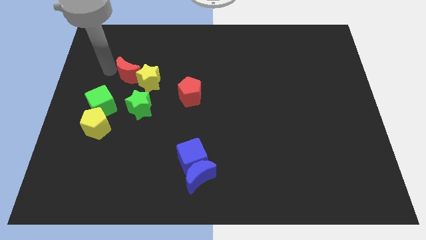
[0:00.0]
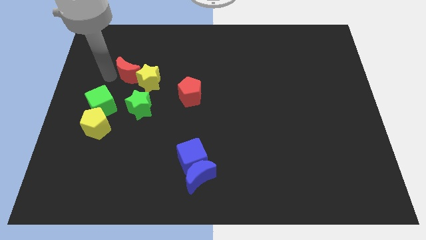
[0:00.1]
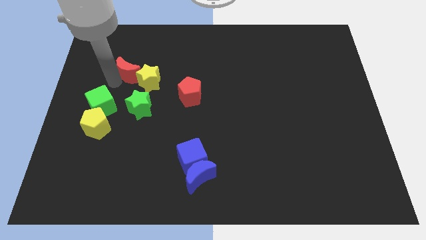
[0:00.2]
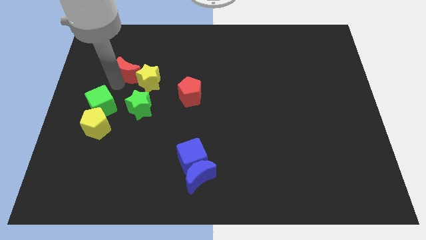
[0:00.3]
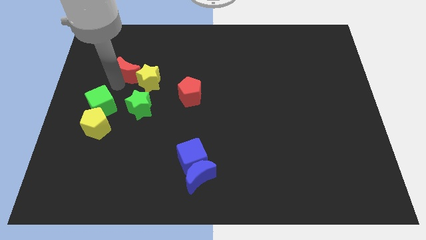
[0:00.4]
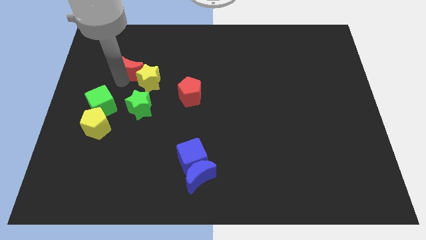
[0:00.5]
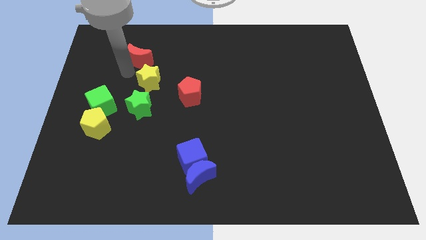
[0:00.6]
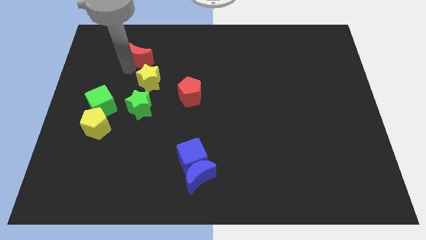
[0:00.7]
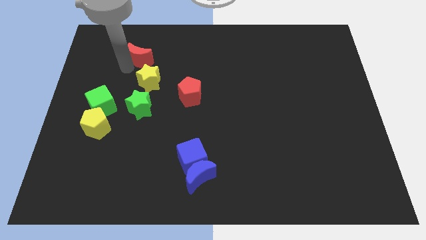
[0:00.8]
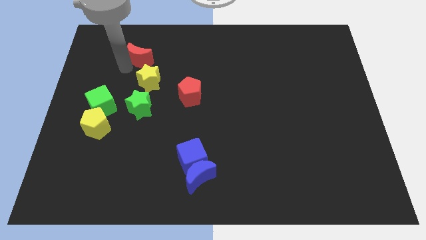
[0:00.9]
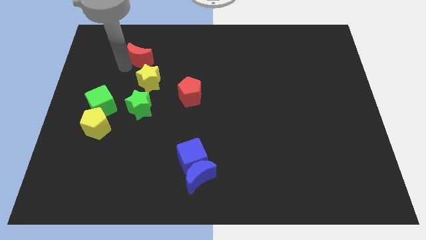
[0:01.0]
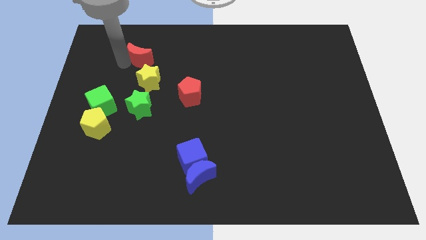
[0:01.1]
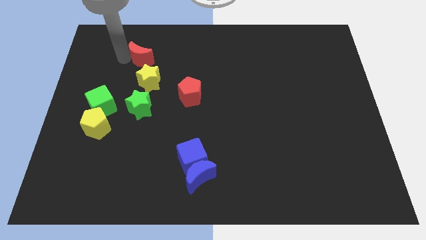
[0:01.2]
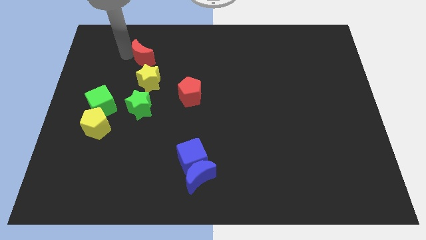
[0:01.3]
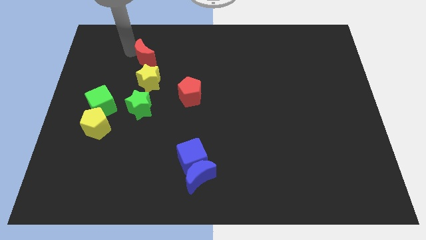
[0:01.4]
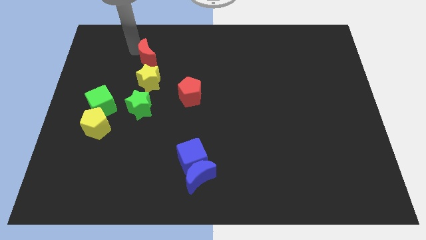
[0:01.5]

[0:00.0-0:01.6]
push the red moon to the top of the yellow star

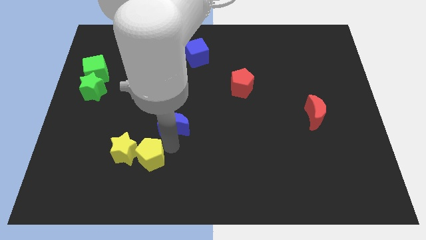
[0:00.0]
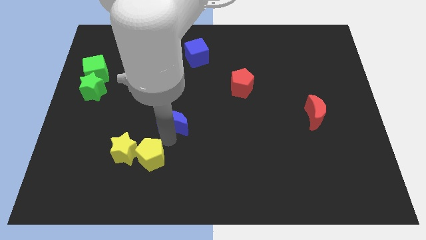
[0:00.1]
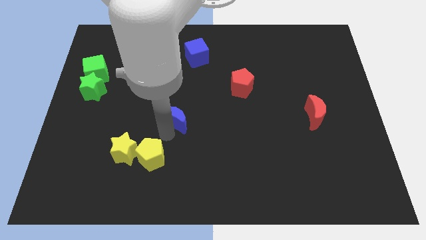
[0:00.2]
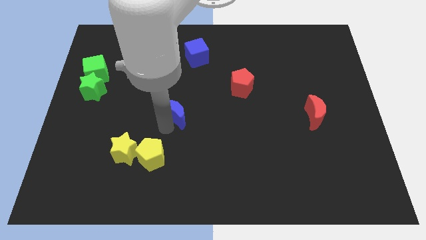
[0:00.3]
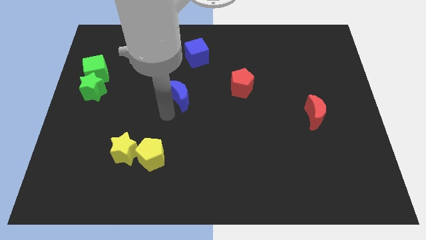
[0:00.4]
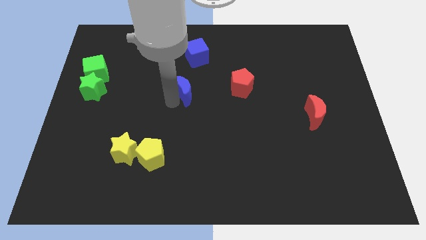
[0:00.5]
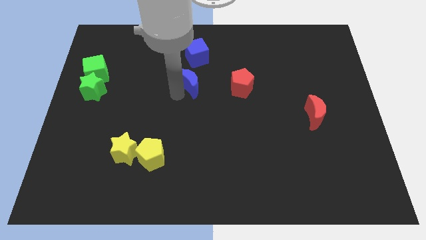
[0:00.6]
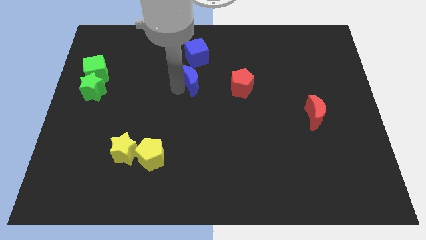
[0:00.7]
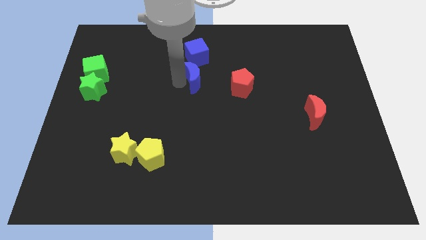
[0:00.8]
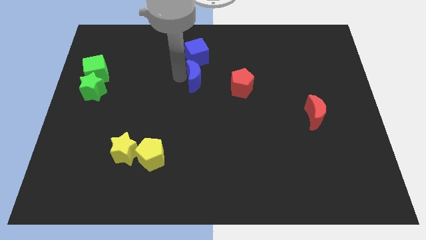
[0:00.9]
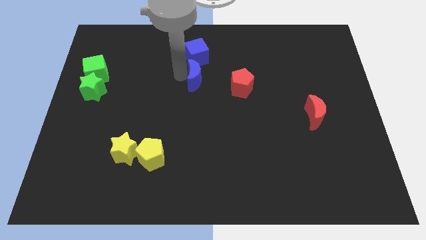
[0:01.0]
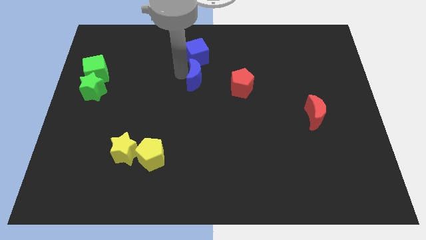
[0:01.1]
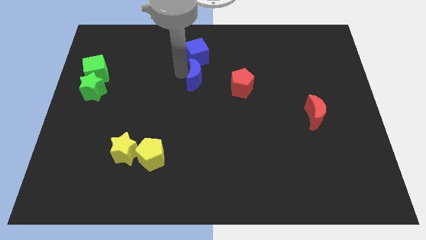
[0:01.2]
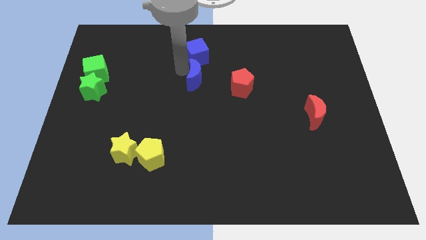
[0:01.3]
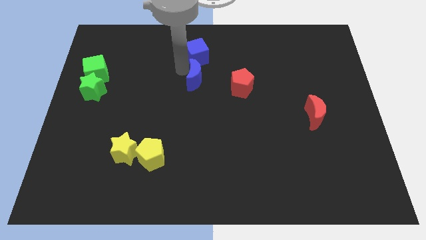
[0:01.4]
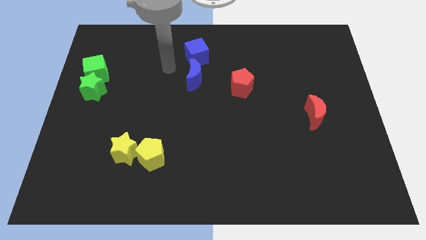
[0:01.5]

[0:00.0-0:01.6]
place the blue crescent below the blue cube

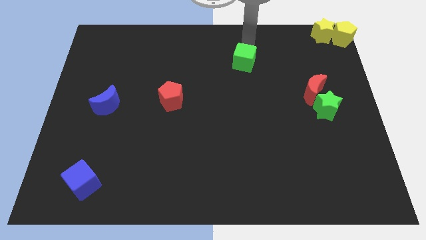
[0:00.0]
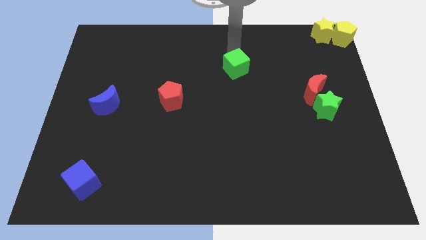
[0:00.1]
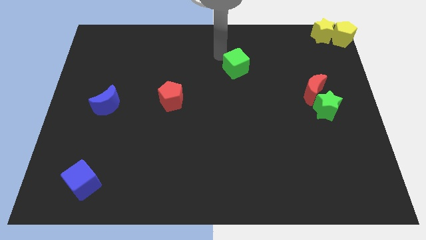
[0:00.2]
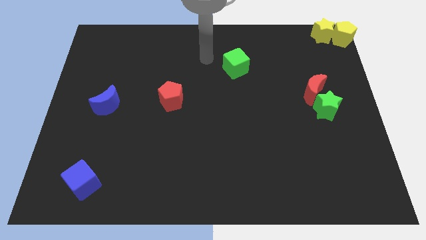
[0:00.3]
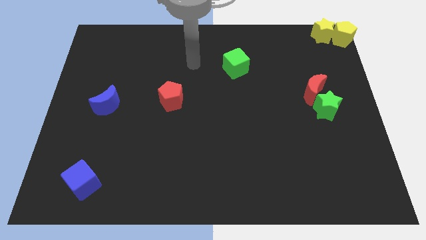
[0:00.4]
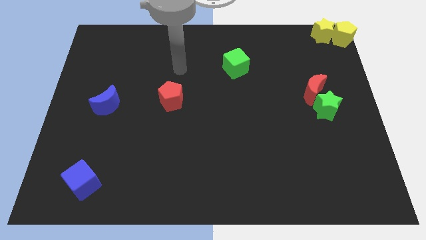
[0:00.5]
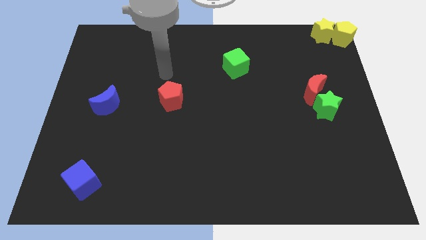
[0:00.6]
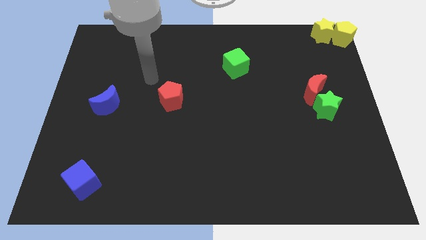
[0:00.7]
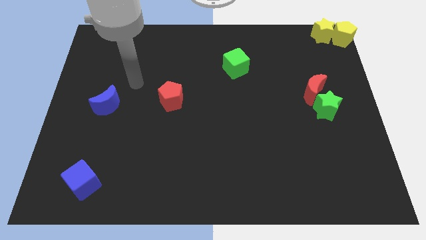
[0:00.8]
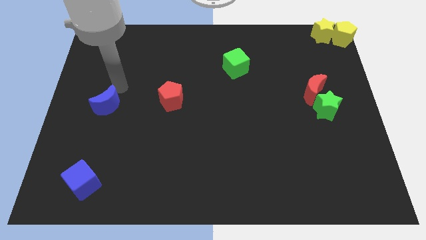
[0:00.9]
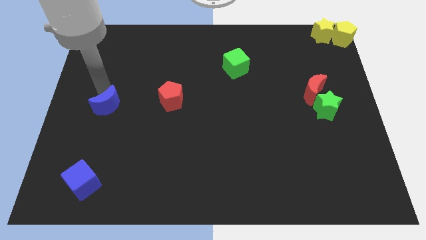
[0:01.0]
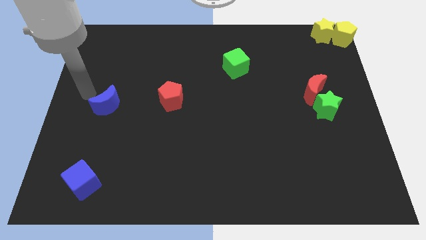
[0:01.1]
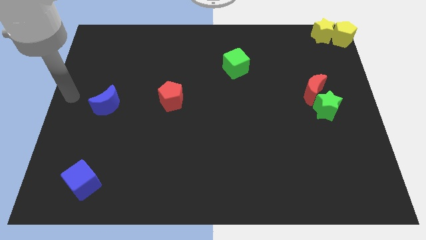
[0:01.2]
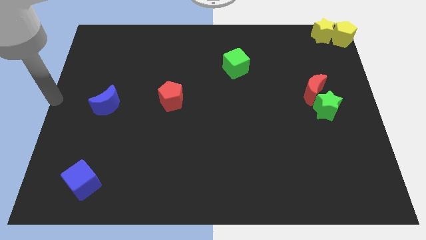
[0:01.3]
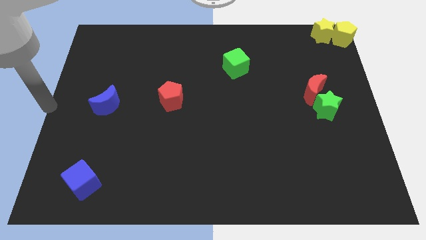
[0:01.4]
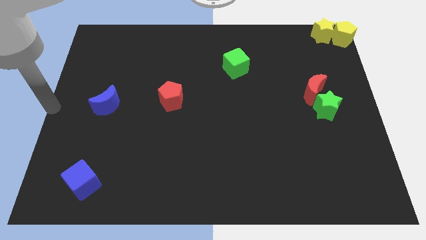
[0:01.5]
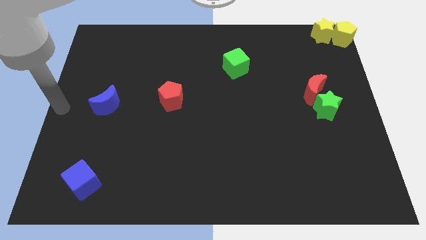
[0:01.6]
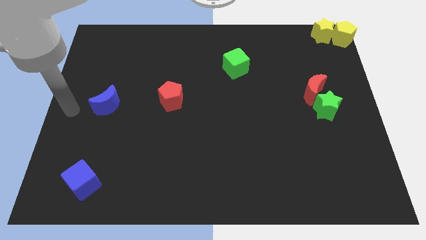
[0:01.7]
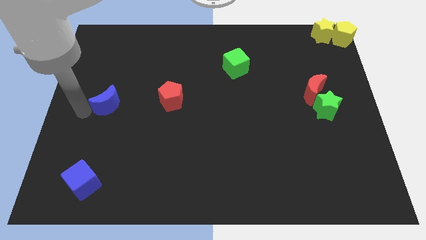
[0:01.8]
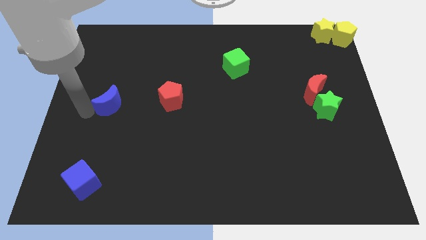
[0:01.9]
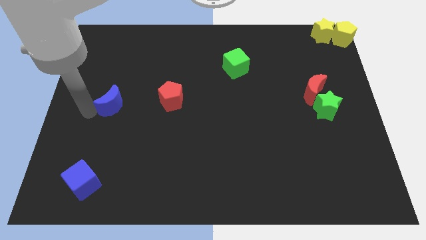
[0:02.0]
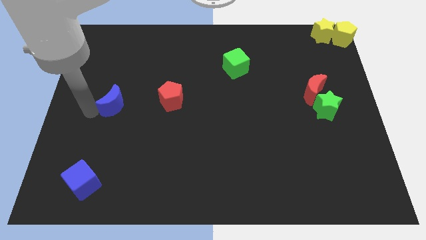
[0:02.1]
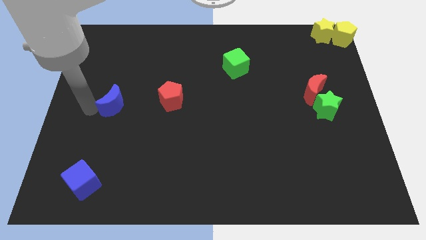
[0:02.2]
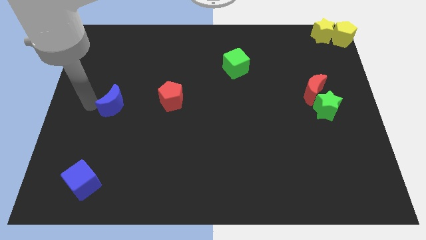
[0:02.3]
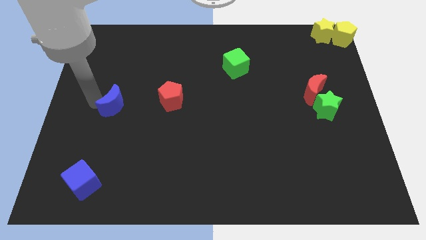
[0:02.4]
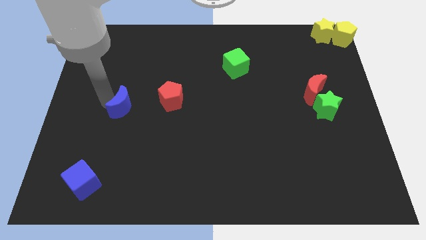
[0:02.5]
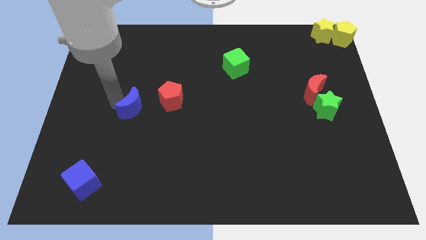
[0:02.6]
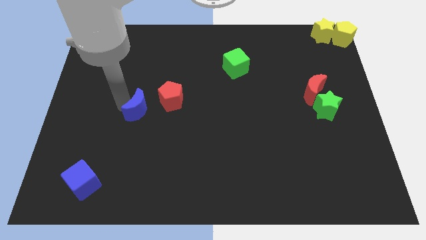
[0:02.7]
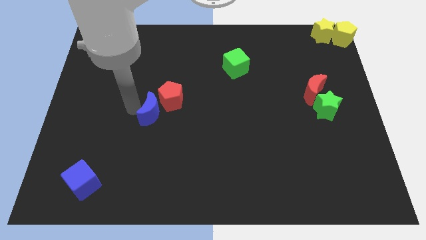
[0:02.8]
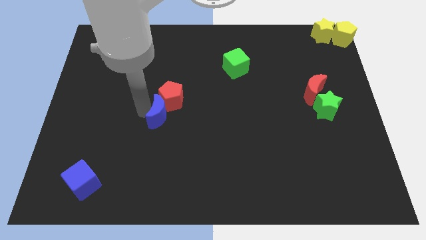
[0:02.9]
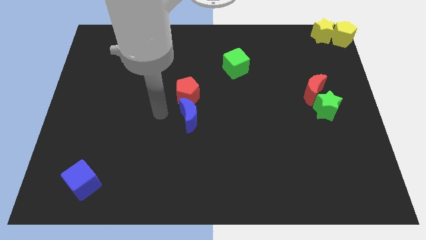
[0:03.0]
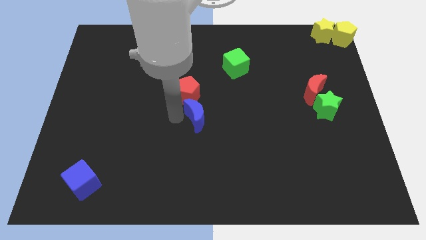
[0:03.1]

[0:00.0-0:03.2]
move the blue moon close to the red pentagon

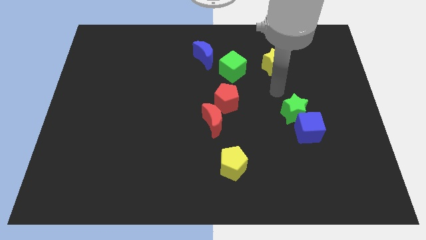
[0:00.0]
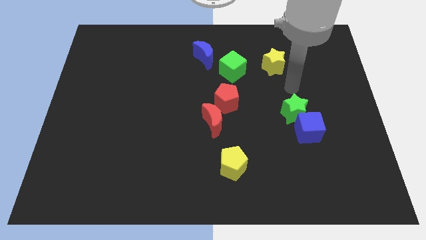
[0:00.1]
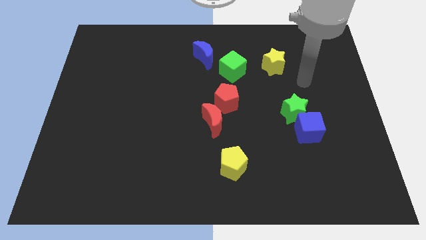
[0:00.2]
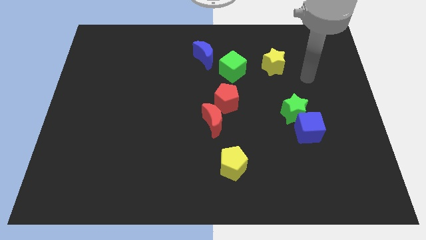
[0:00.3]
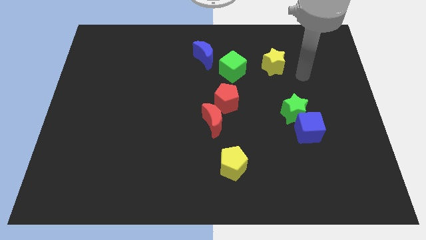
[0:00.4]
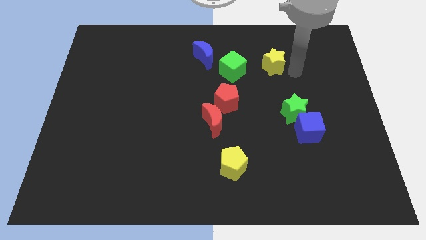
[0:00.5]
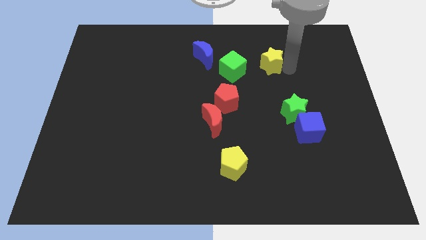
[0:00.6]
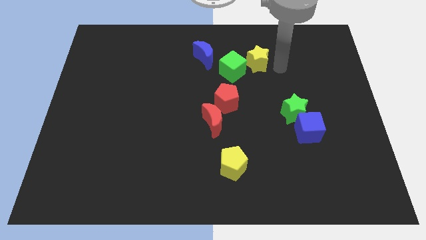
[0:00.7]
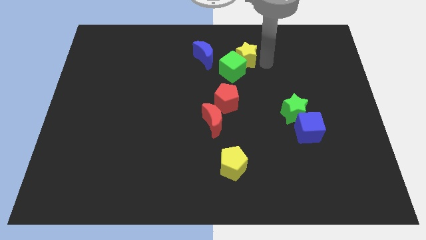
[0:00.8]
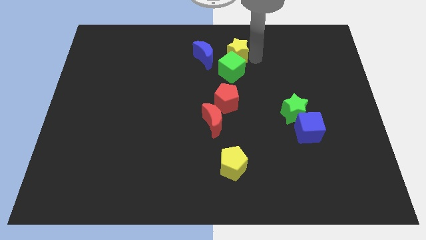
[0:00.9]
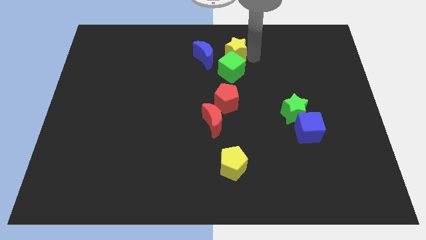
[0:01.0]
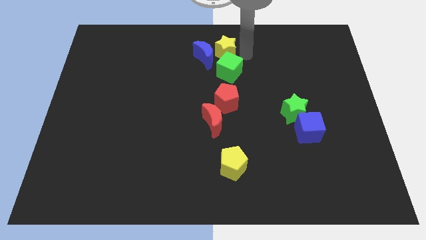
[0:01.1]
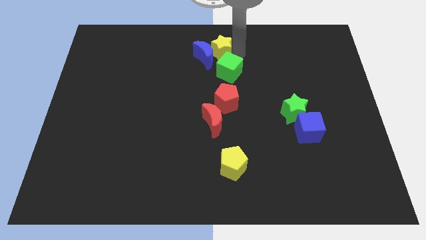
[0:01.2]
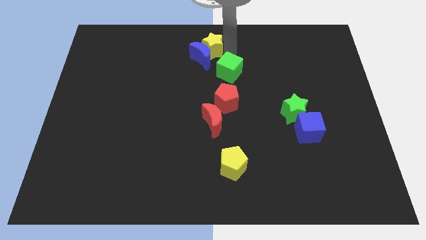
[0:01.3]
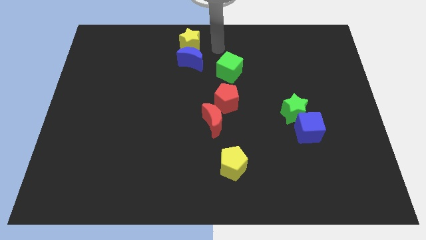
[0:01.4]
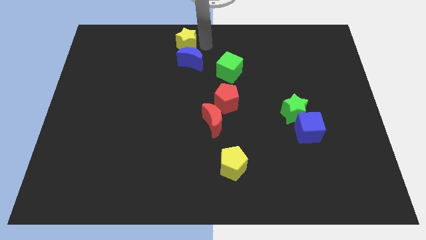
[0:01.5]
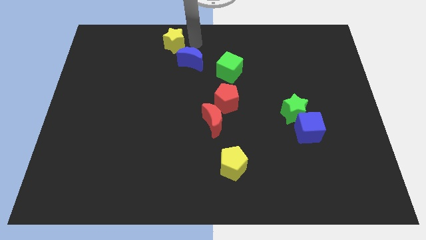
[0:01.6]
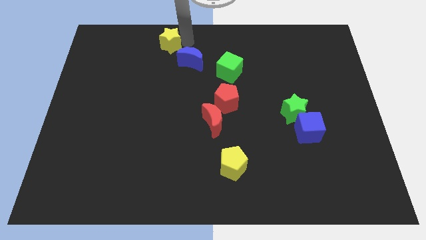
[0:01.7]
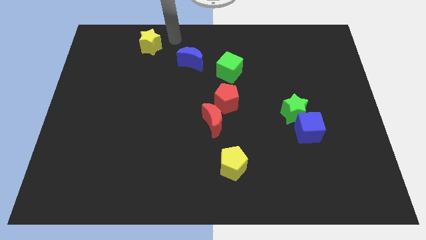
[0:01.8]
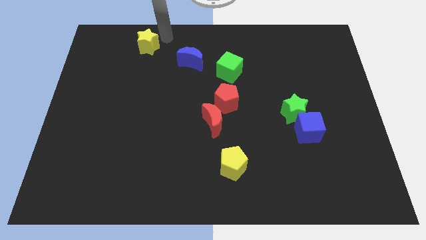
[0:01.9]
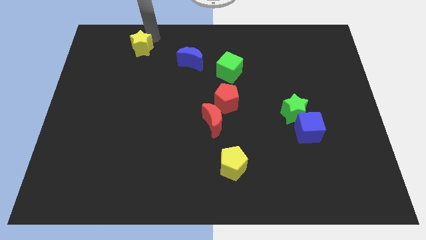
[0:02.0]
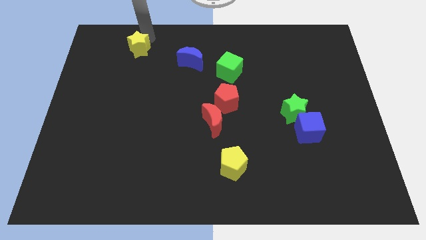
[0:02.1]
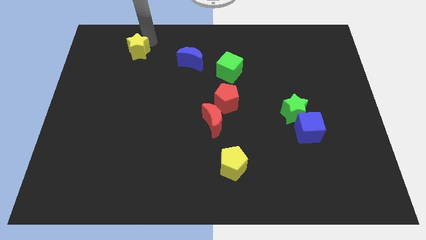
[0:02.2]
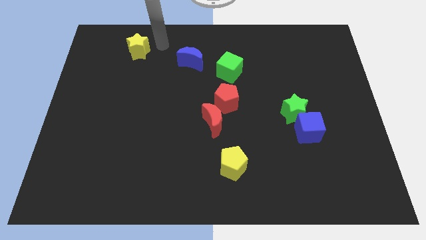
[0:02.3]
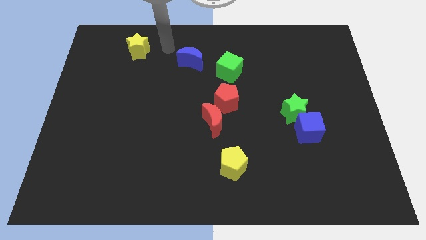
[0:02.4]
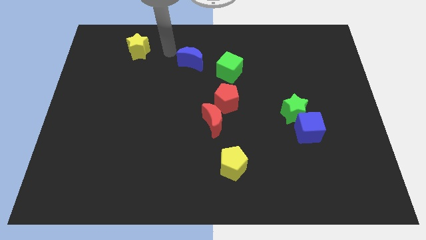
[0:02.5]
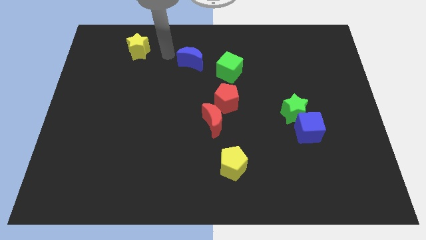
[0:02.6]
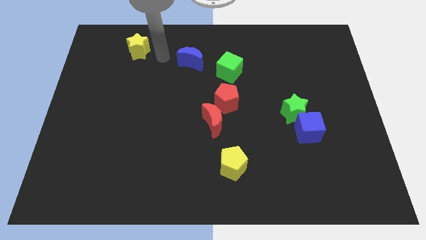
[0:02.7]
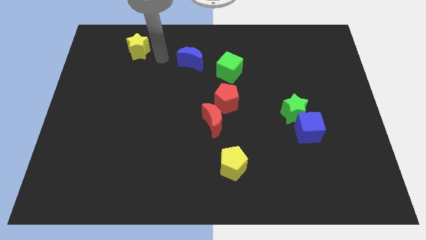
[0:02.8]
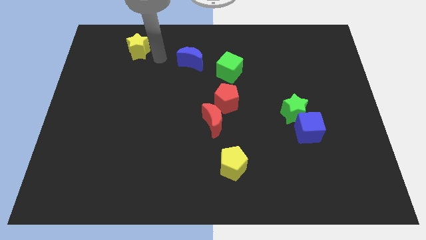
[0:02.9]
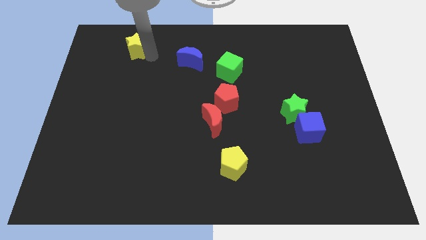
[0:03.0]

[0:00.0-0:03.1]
move the yellow star diagonally top left to blue moon
